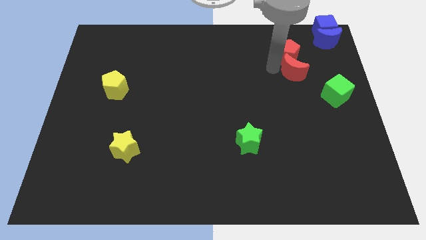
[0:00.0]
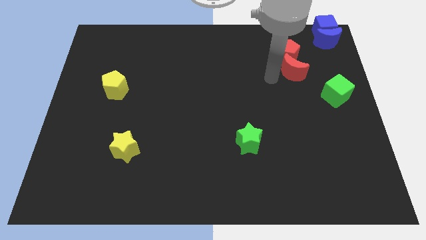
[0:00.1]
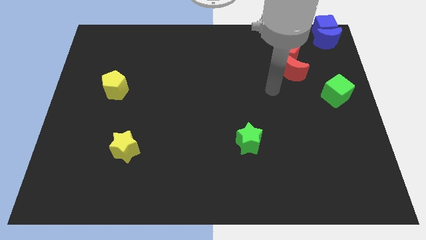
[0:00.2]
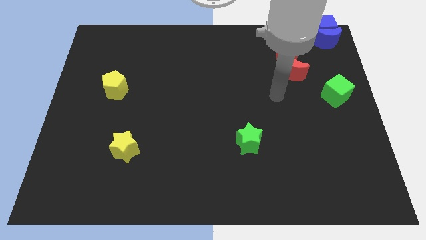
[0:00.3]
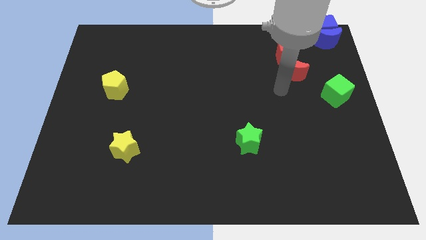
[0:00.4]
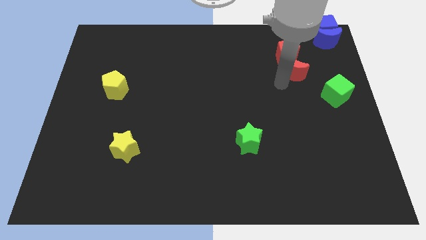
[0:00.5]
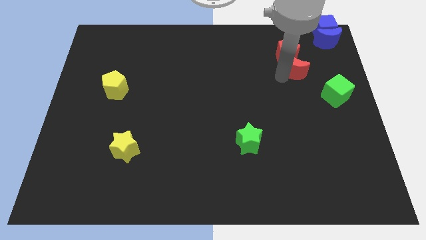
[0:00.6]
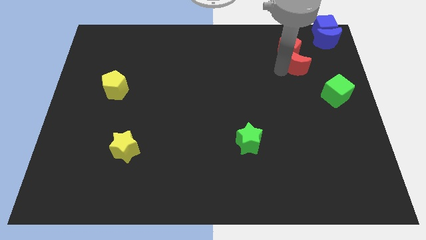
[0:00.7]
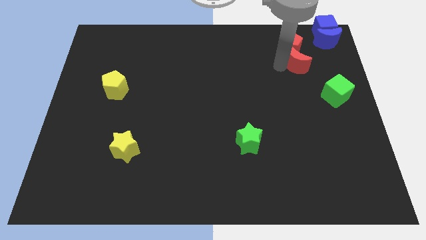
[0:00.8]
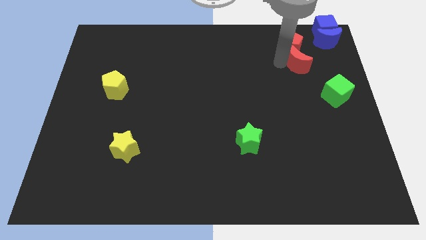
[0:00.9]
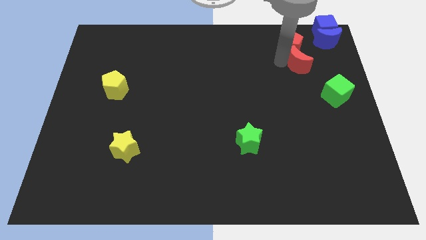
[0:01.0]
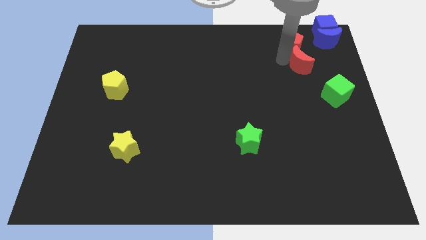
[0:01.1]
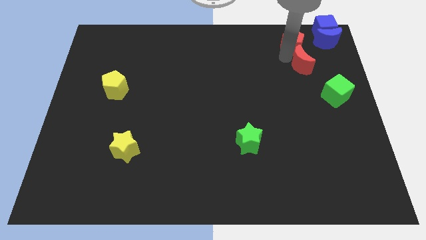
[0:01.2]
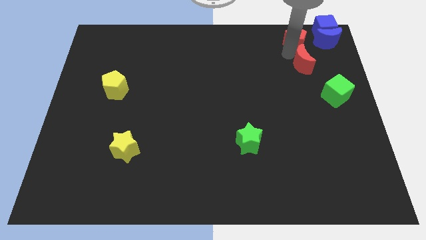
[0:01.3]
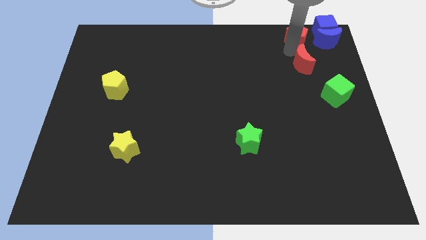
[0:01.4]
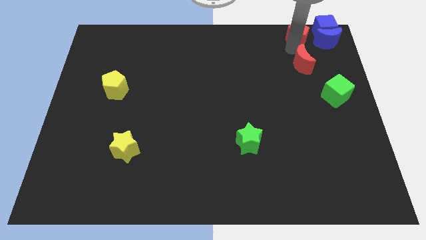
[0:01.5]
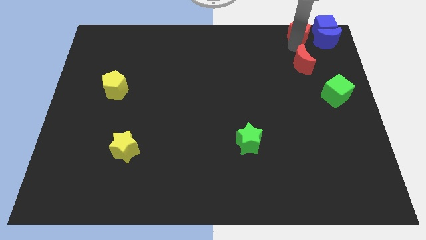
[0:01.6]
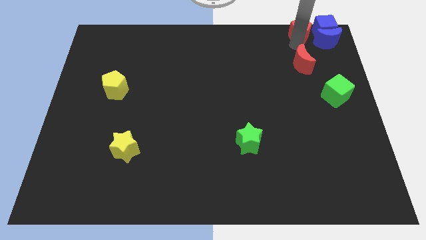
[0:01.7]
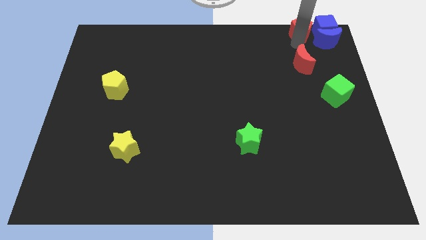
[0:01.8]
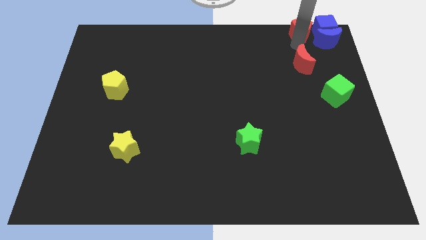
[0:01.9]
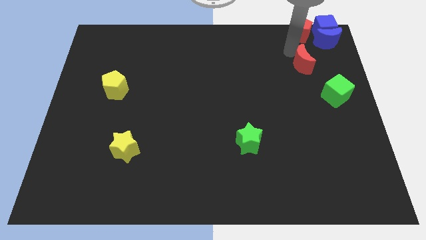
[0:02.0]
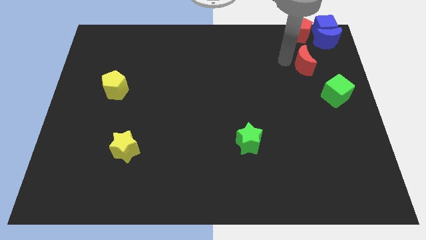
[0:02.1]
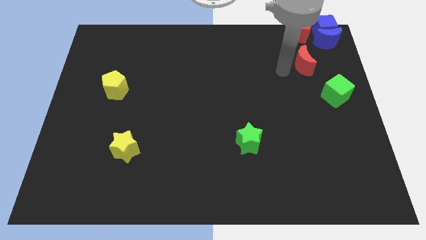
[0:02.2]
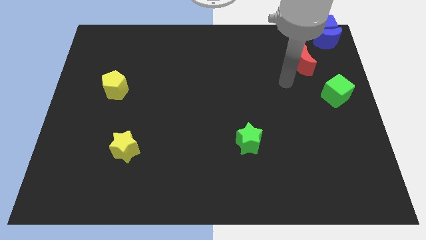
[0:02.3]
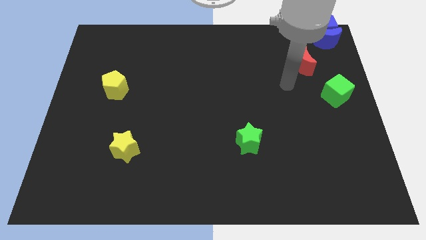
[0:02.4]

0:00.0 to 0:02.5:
place red blocks near blue blocks

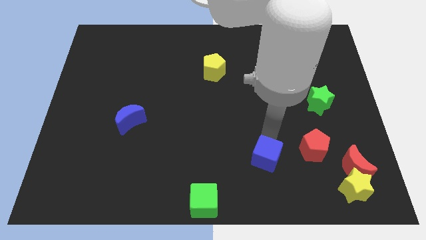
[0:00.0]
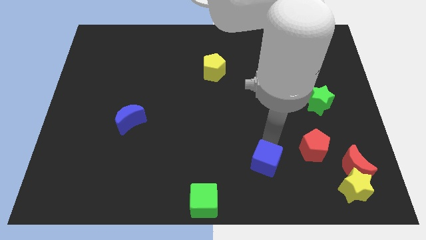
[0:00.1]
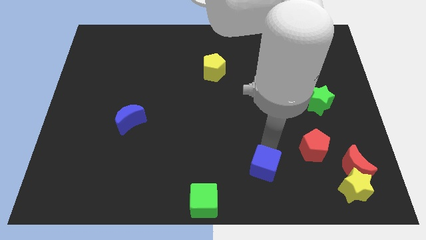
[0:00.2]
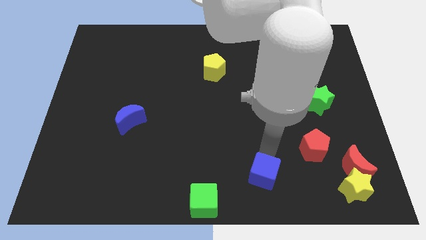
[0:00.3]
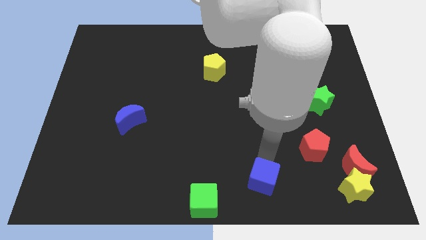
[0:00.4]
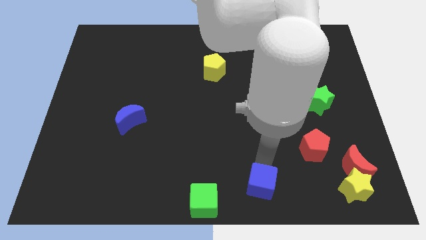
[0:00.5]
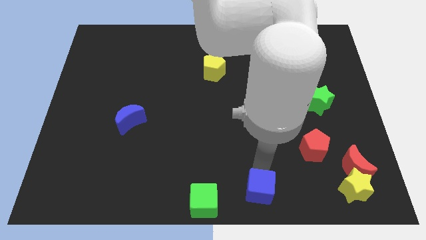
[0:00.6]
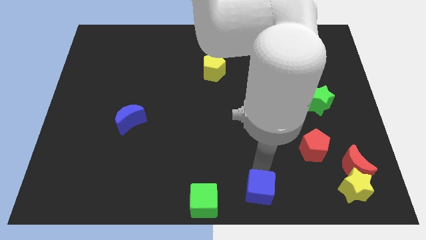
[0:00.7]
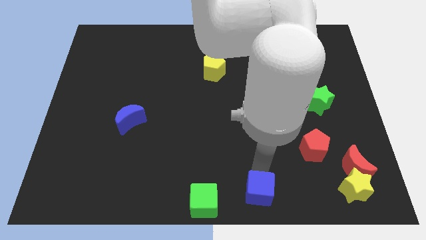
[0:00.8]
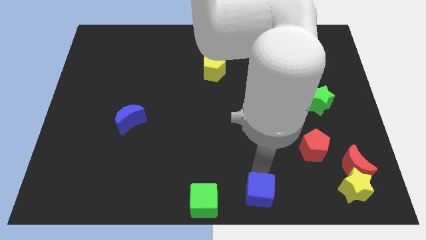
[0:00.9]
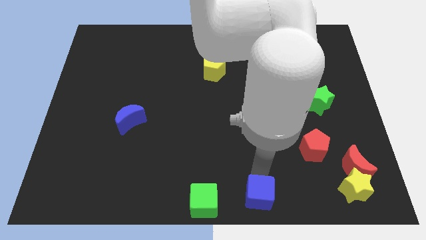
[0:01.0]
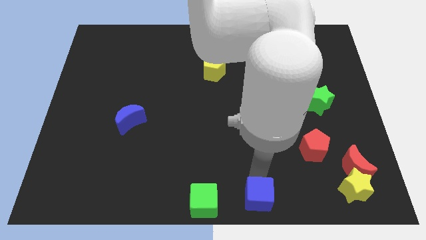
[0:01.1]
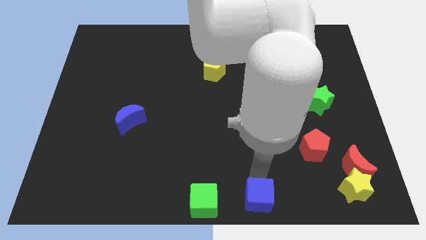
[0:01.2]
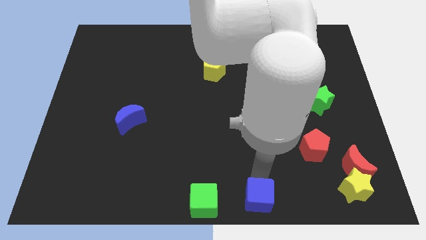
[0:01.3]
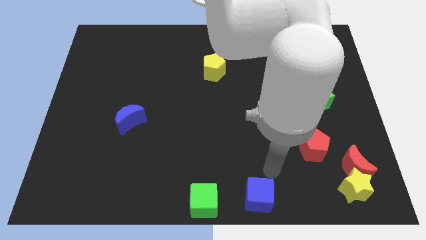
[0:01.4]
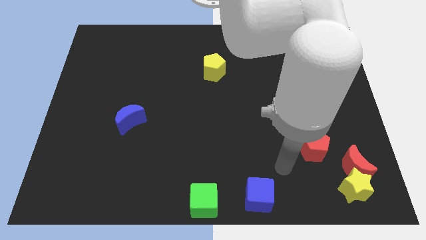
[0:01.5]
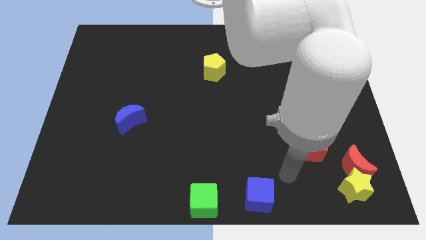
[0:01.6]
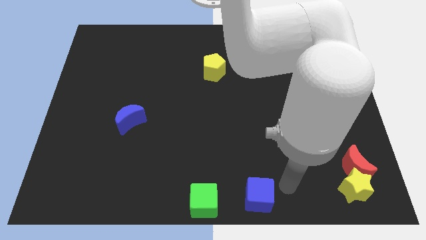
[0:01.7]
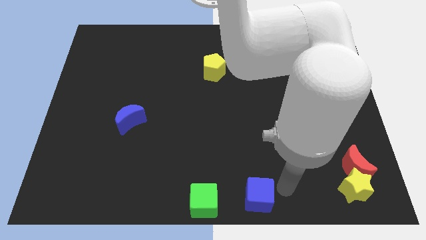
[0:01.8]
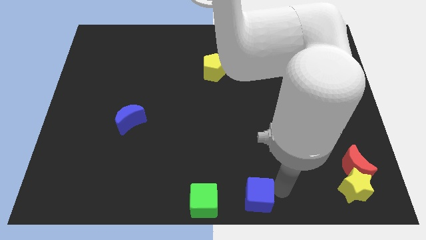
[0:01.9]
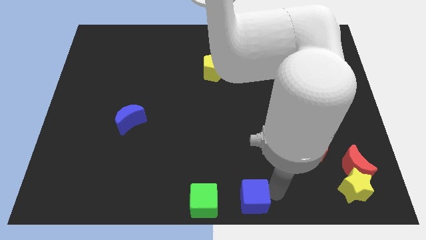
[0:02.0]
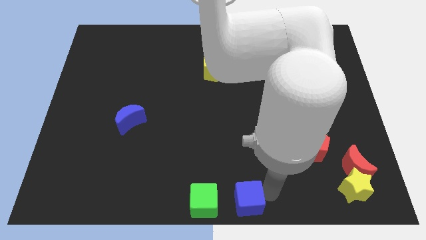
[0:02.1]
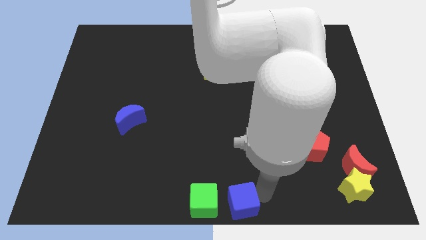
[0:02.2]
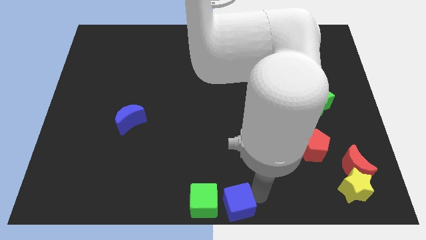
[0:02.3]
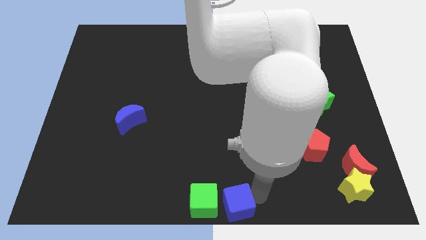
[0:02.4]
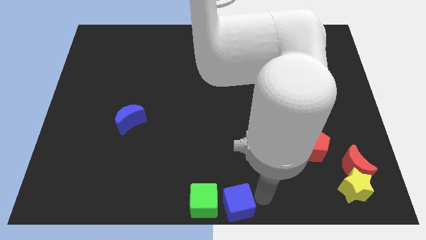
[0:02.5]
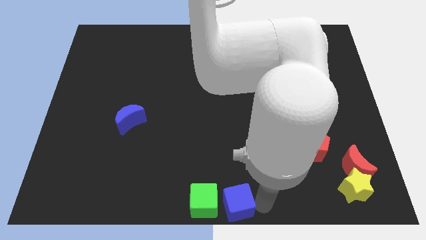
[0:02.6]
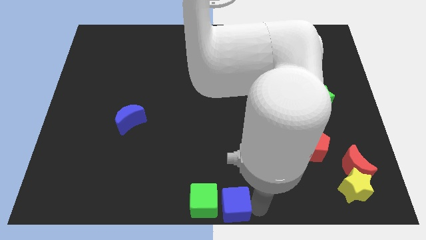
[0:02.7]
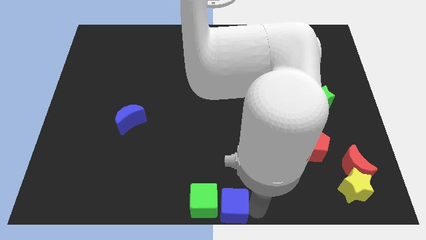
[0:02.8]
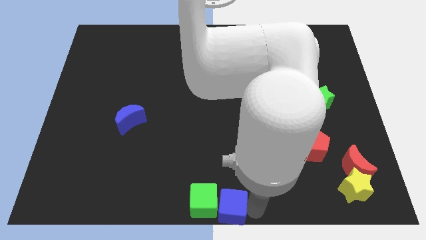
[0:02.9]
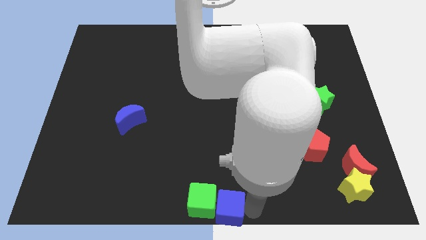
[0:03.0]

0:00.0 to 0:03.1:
push blue cube right to green cube

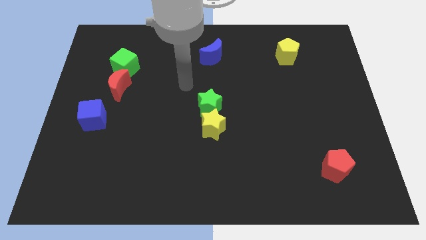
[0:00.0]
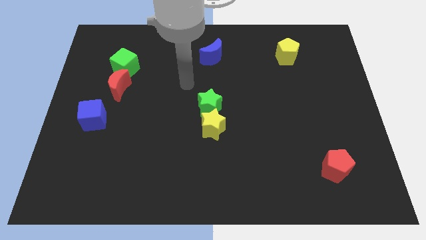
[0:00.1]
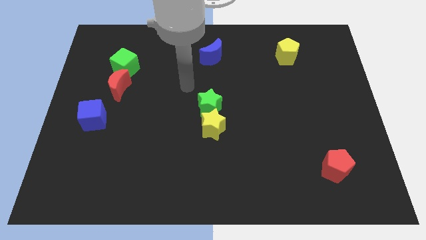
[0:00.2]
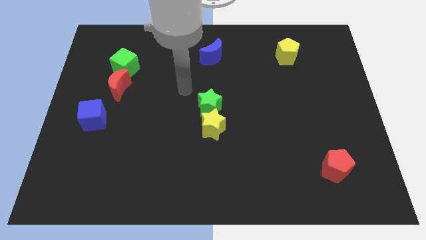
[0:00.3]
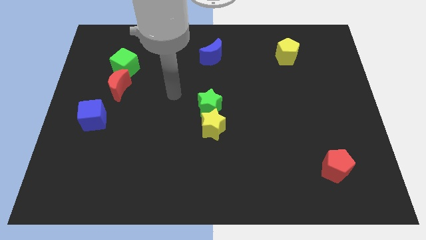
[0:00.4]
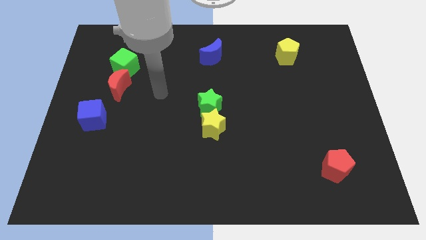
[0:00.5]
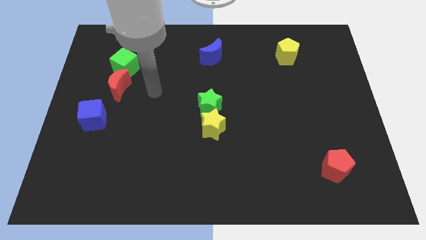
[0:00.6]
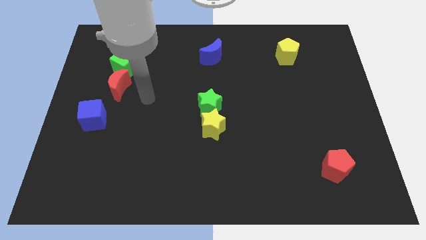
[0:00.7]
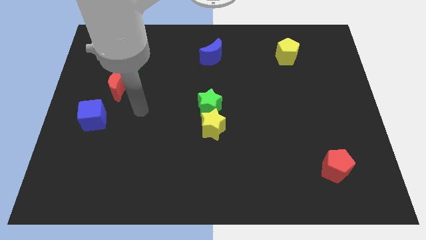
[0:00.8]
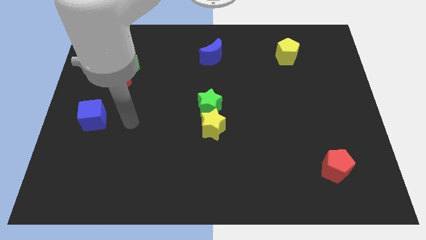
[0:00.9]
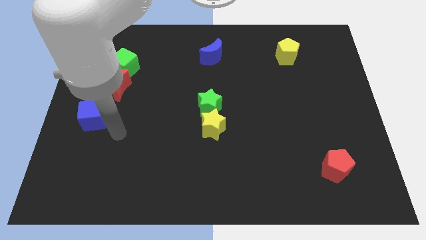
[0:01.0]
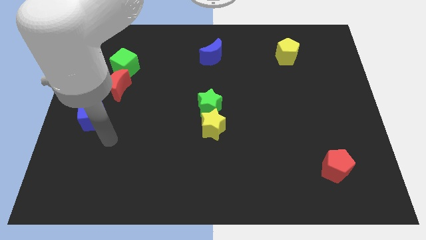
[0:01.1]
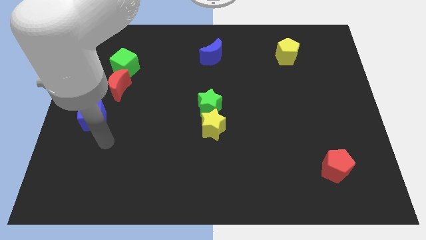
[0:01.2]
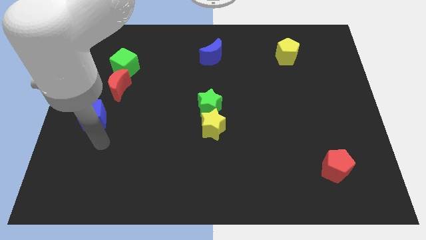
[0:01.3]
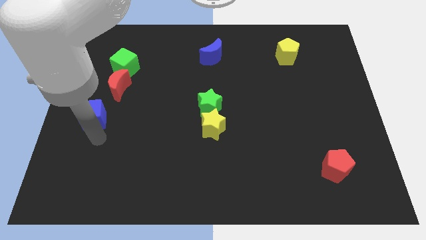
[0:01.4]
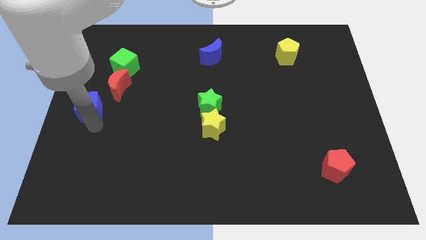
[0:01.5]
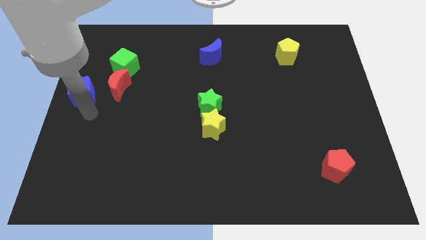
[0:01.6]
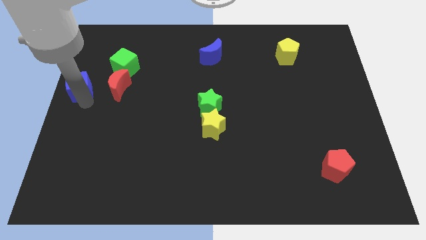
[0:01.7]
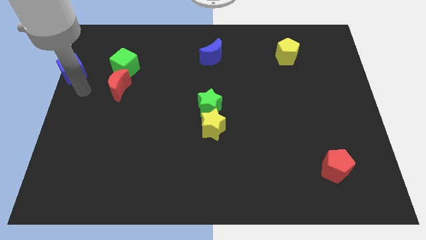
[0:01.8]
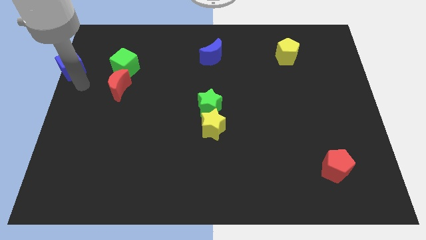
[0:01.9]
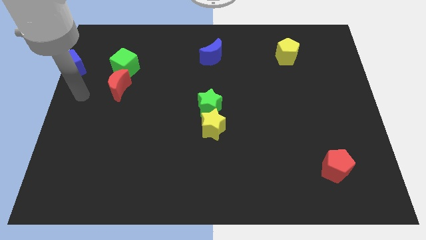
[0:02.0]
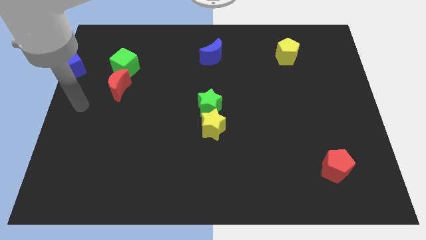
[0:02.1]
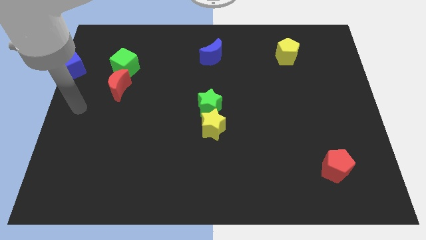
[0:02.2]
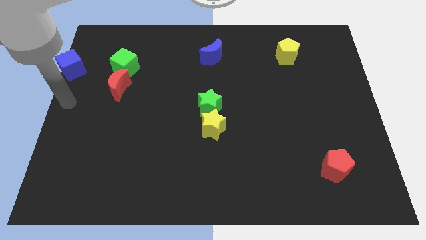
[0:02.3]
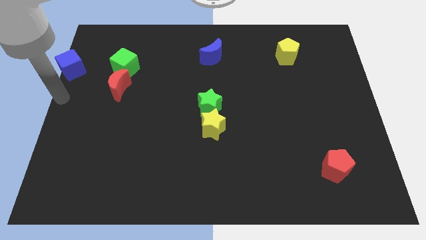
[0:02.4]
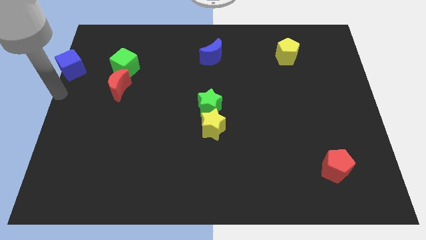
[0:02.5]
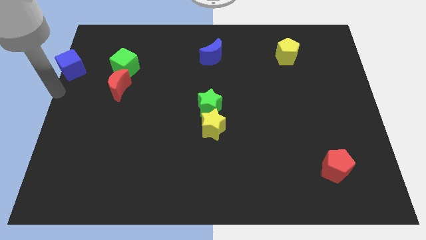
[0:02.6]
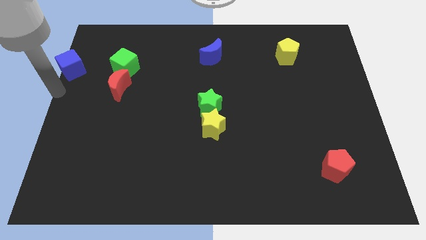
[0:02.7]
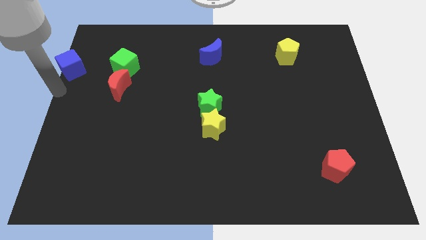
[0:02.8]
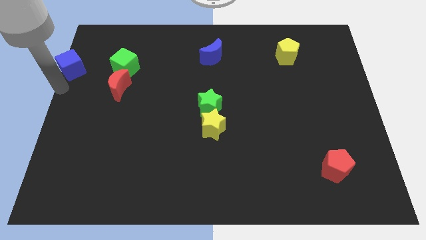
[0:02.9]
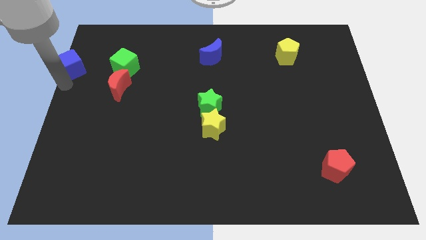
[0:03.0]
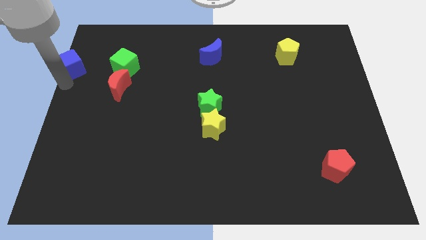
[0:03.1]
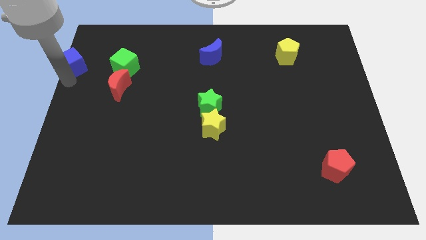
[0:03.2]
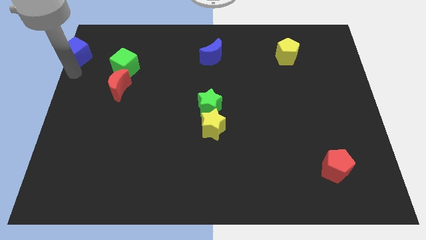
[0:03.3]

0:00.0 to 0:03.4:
move the blue cube parallel left to the green cube
